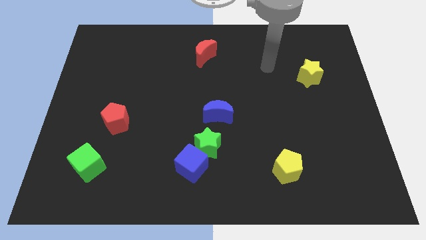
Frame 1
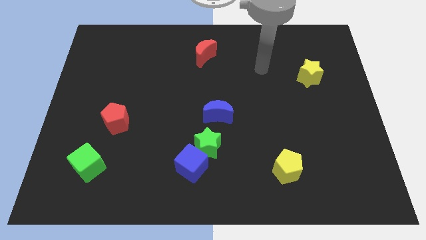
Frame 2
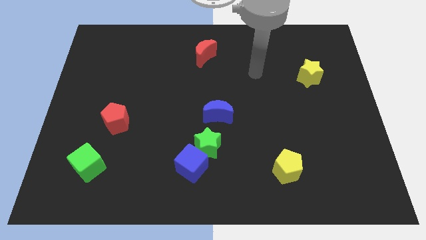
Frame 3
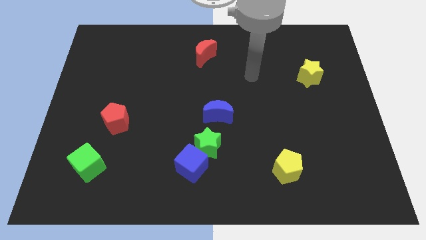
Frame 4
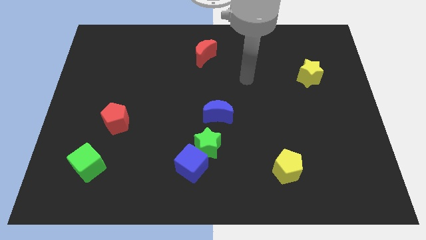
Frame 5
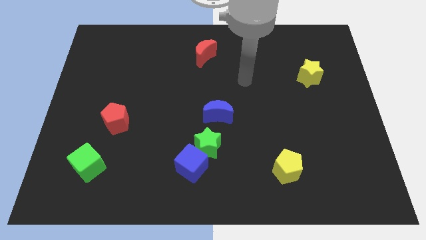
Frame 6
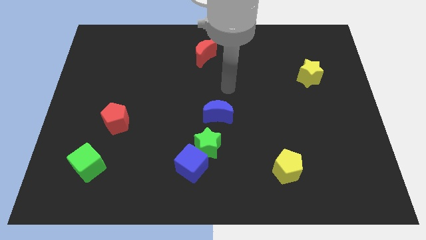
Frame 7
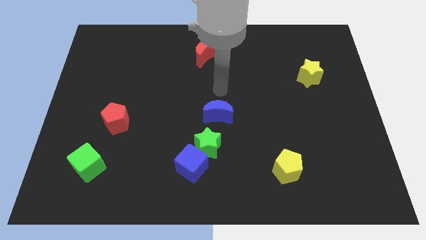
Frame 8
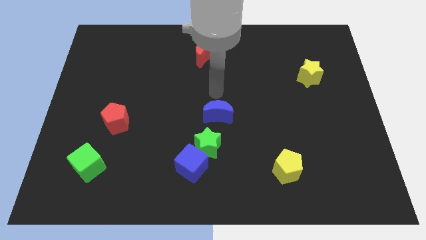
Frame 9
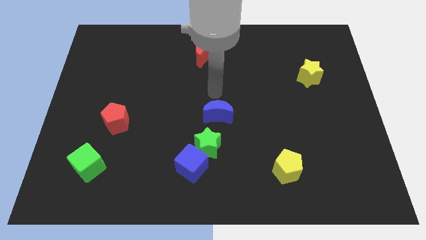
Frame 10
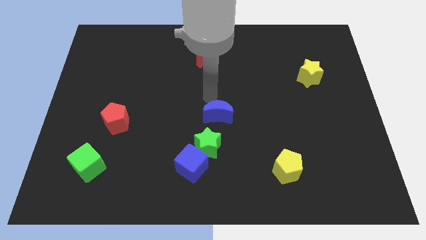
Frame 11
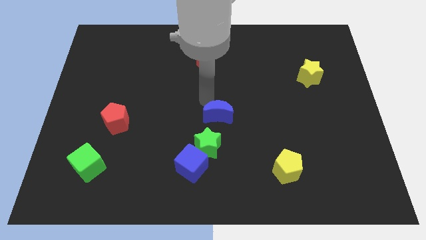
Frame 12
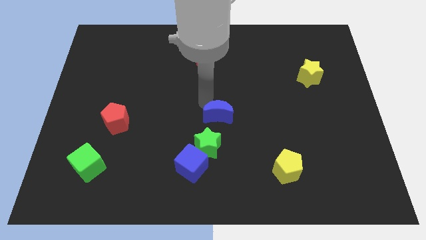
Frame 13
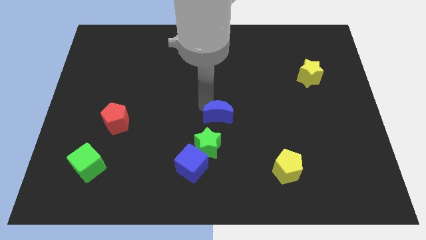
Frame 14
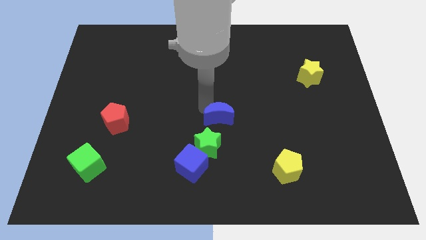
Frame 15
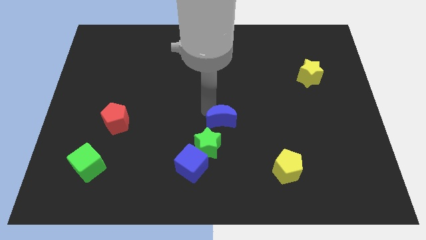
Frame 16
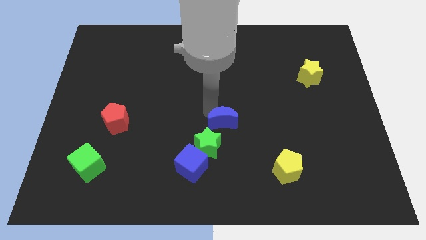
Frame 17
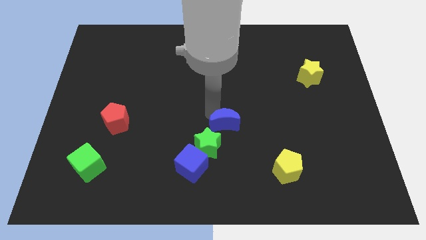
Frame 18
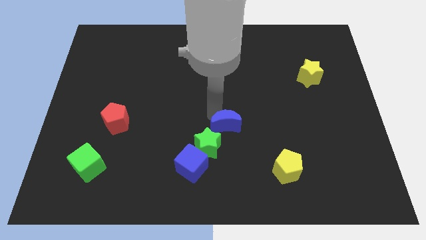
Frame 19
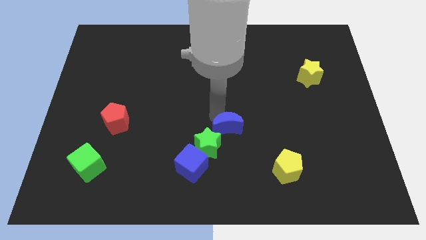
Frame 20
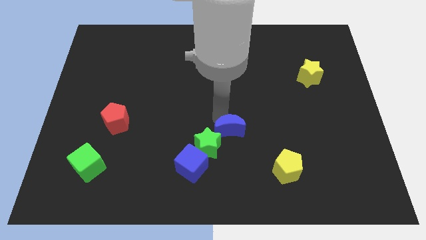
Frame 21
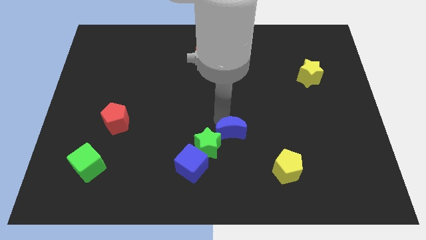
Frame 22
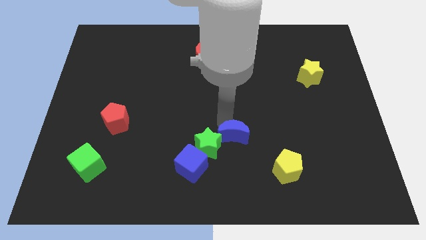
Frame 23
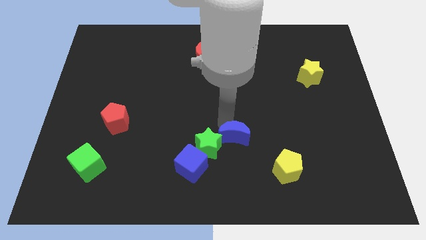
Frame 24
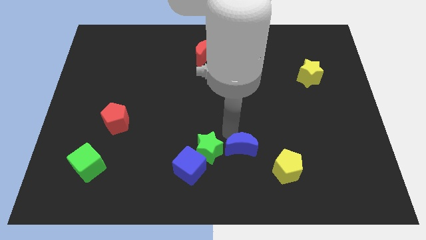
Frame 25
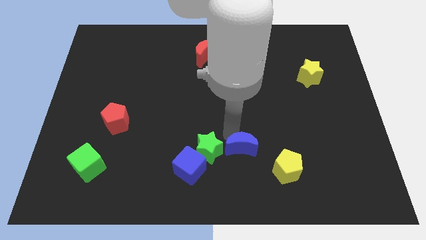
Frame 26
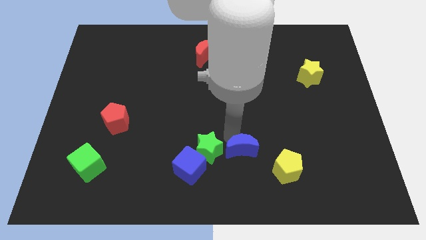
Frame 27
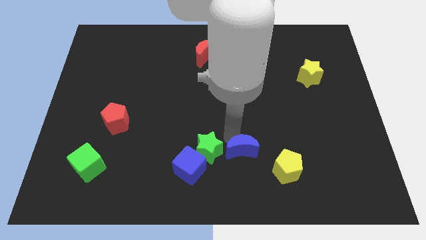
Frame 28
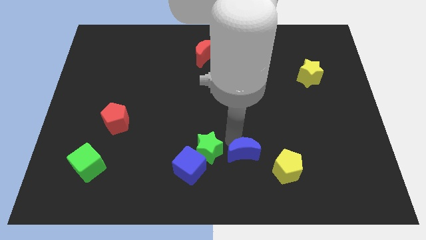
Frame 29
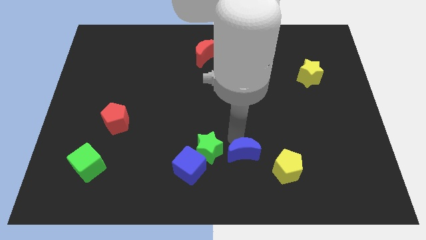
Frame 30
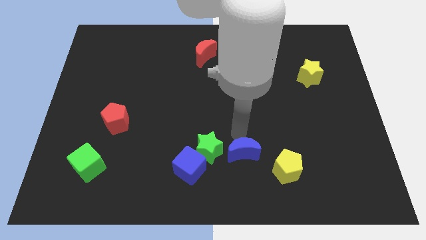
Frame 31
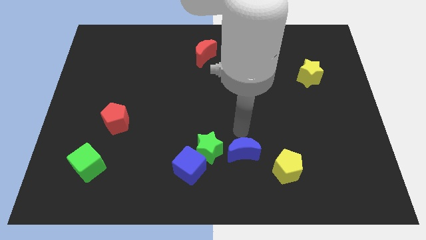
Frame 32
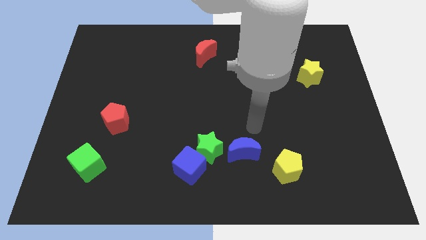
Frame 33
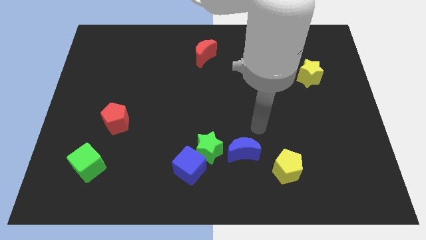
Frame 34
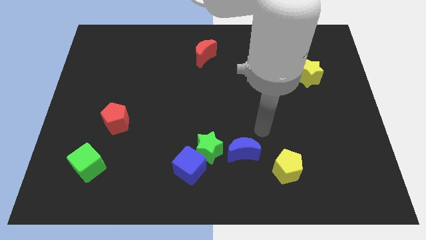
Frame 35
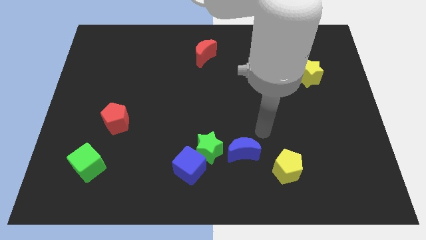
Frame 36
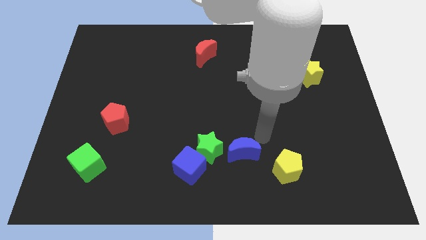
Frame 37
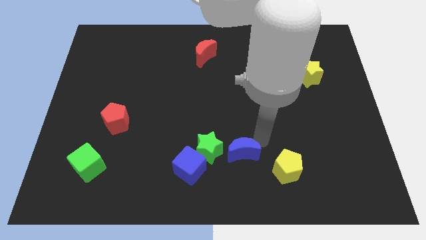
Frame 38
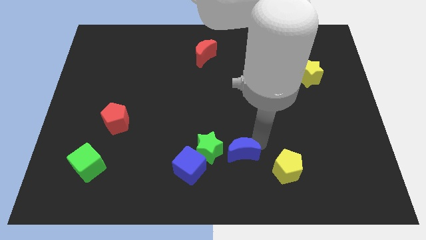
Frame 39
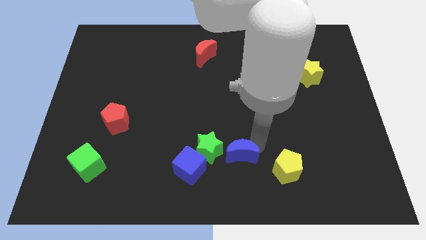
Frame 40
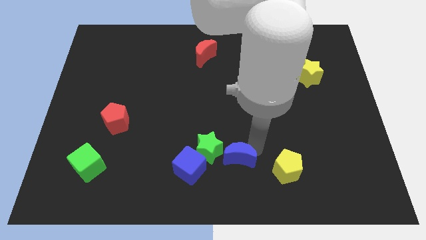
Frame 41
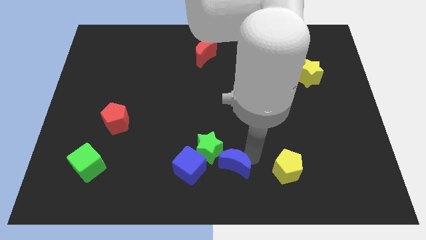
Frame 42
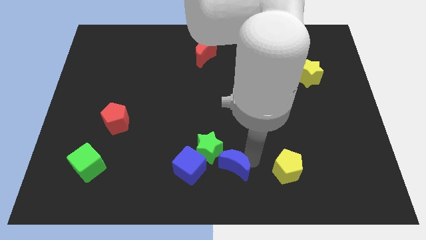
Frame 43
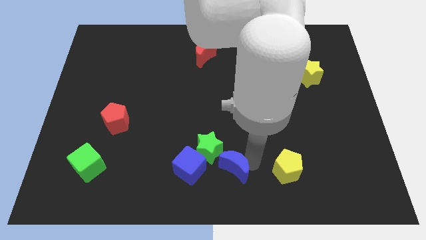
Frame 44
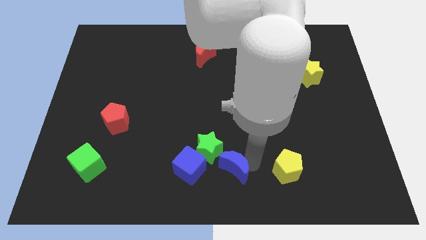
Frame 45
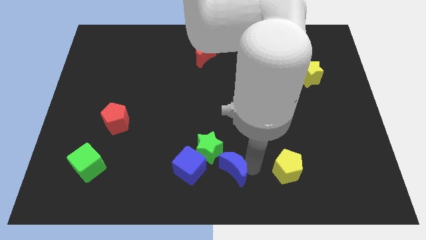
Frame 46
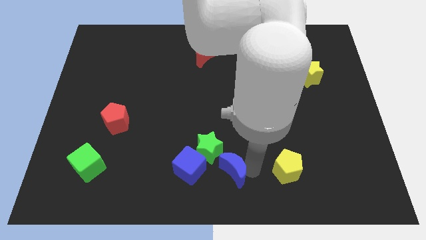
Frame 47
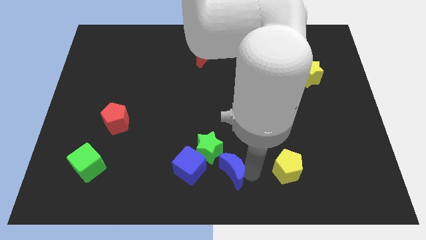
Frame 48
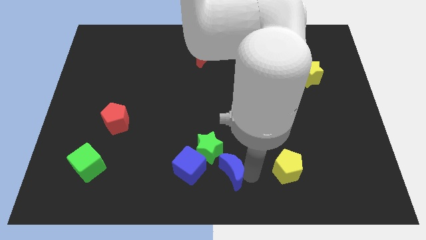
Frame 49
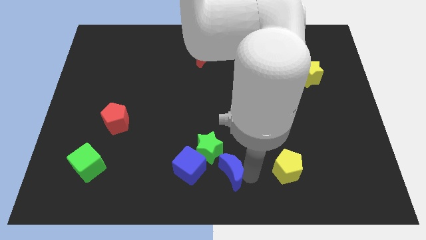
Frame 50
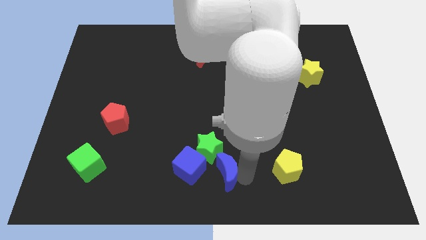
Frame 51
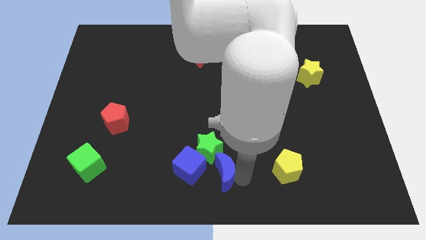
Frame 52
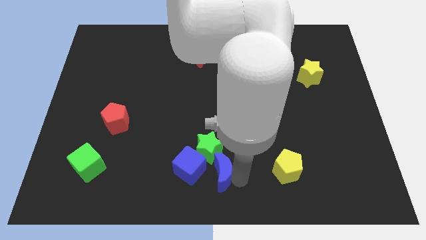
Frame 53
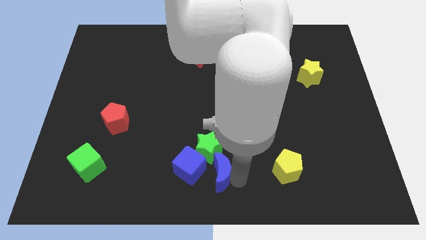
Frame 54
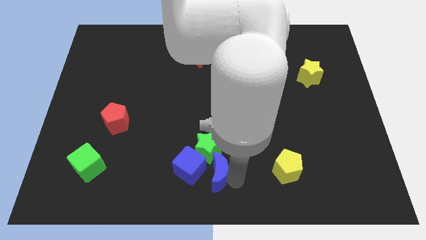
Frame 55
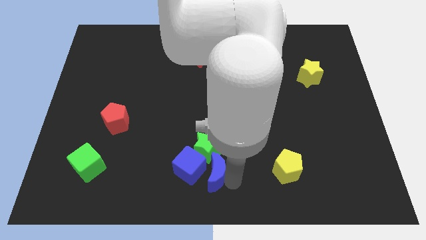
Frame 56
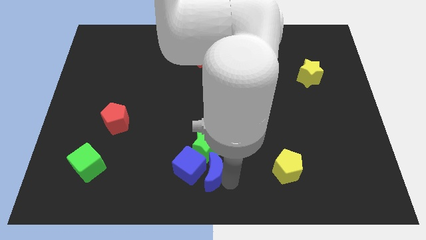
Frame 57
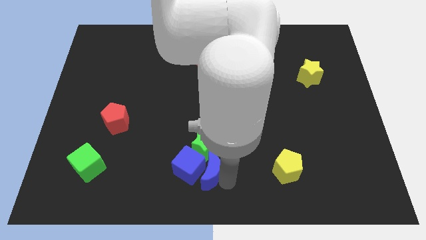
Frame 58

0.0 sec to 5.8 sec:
slide the blue moon close to the blue cube

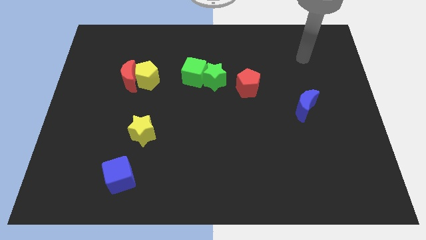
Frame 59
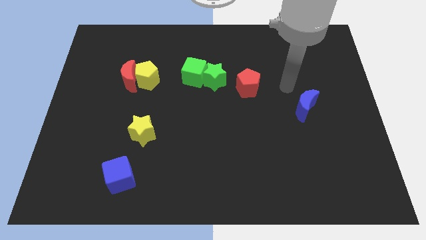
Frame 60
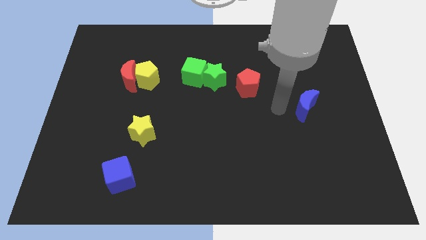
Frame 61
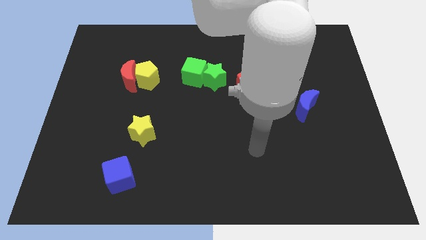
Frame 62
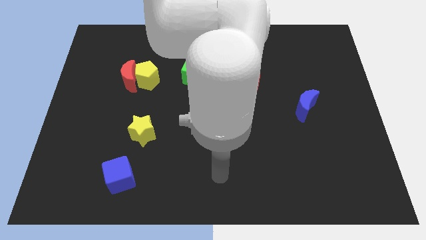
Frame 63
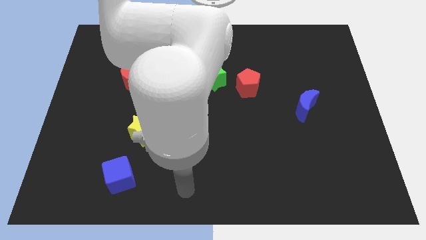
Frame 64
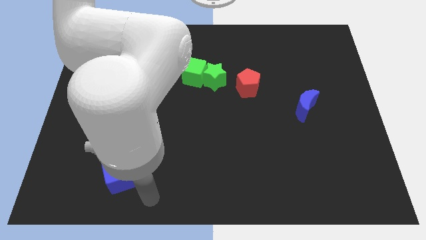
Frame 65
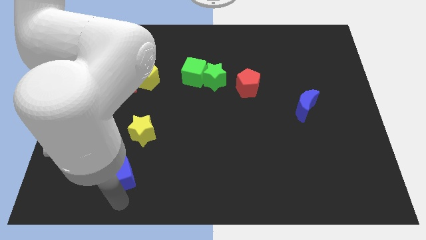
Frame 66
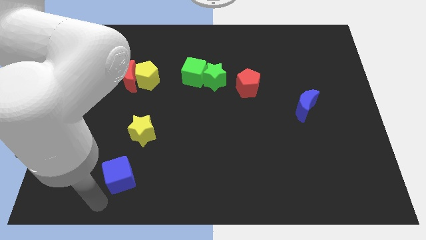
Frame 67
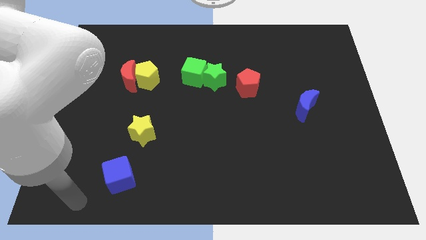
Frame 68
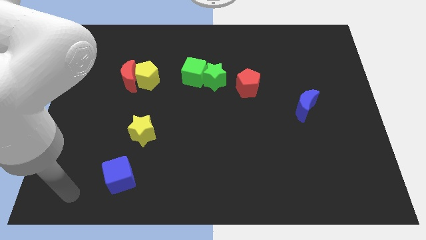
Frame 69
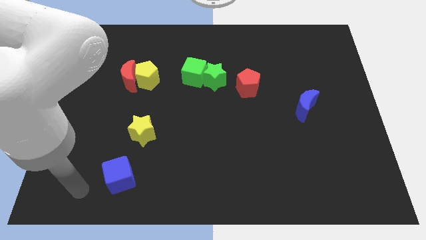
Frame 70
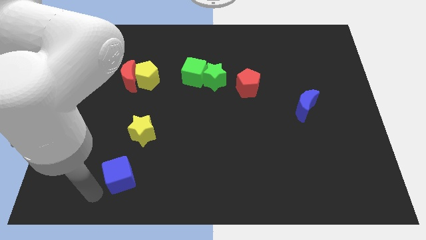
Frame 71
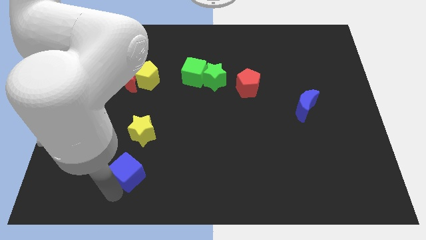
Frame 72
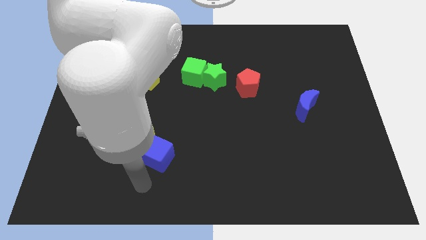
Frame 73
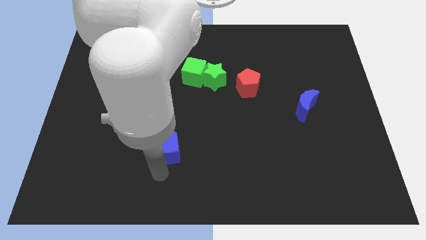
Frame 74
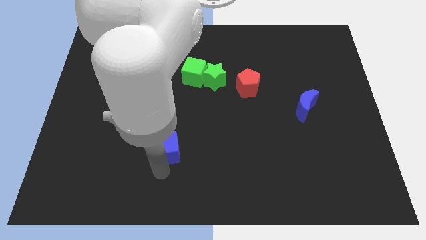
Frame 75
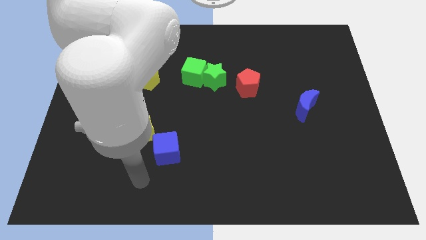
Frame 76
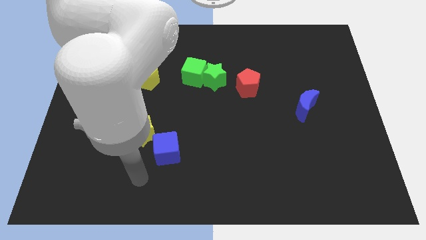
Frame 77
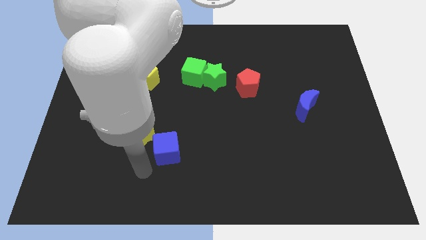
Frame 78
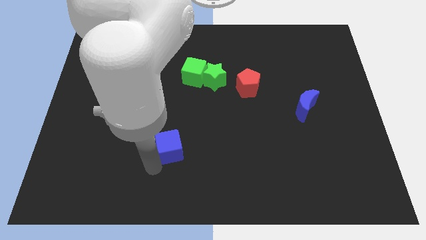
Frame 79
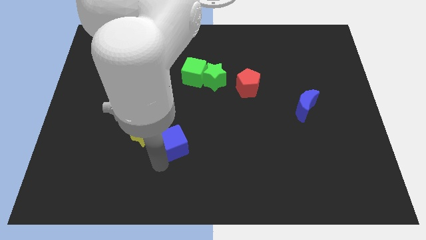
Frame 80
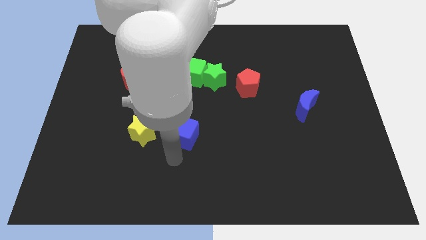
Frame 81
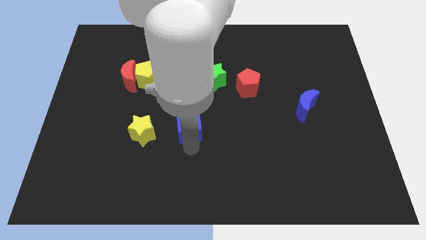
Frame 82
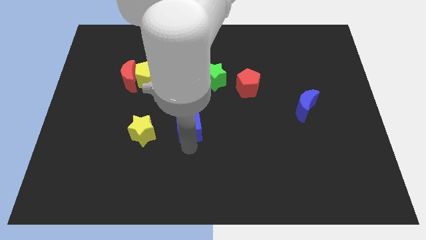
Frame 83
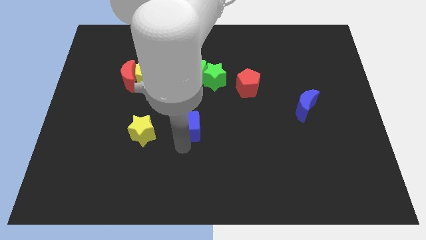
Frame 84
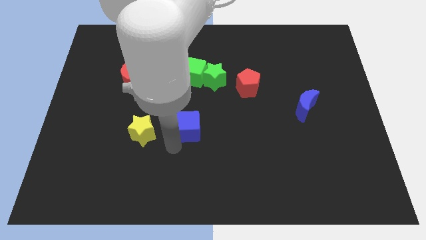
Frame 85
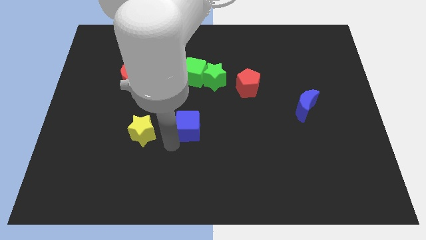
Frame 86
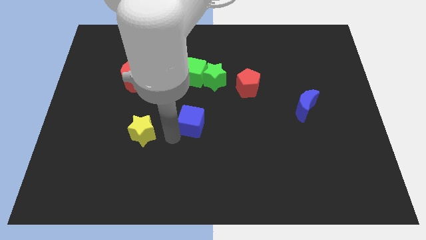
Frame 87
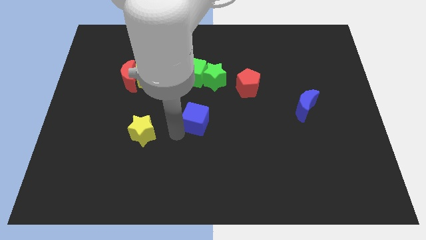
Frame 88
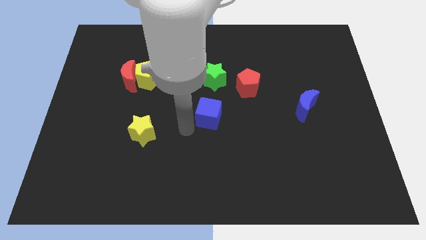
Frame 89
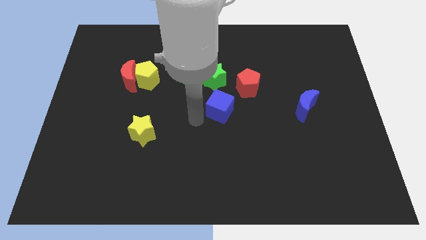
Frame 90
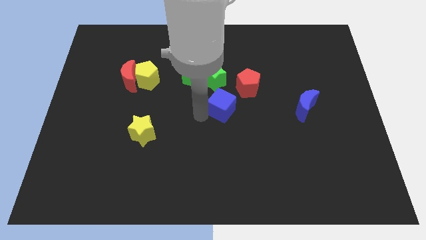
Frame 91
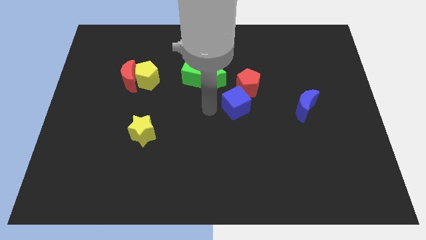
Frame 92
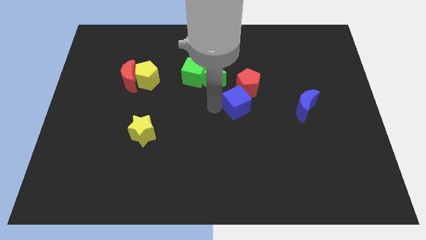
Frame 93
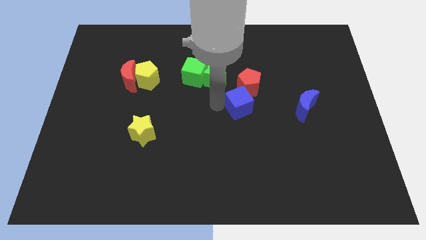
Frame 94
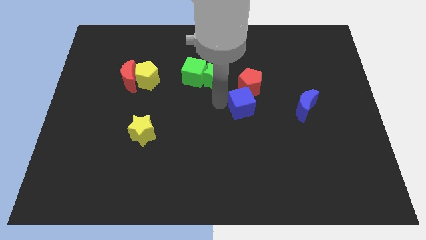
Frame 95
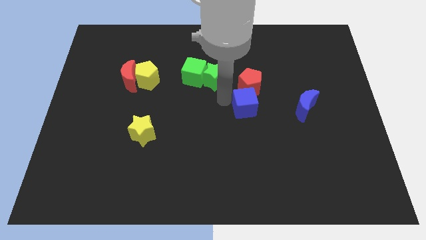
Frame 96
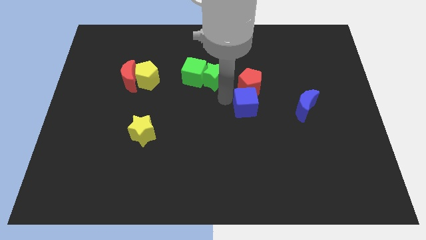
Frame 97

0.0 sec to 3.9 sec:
move the blue cube towards the red pentagon
